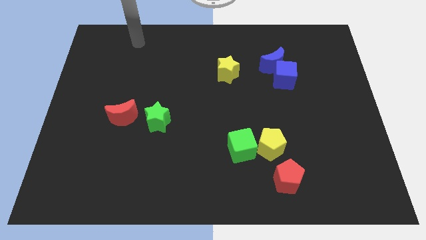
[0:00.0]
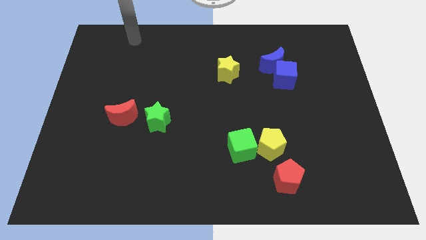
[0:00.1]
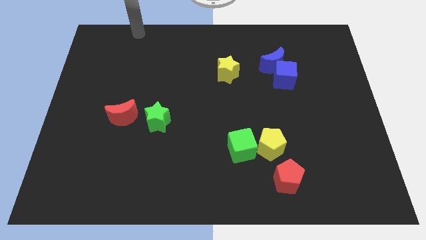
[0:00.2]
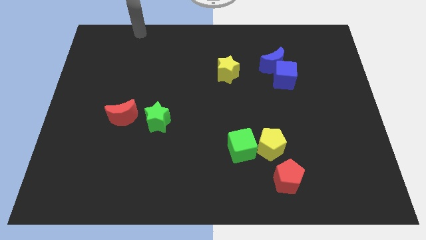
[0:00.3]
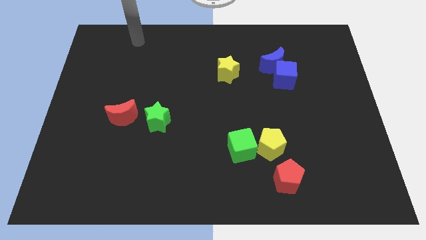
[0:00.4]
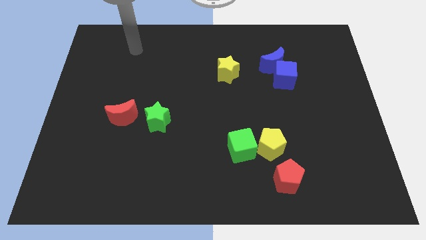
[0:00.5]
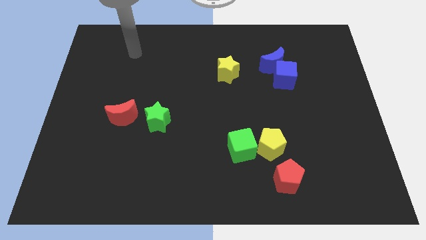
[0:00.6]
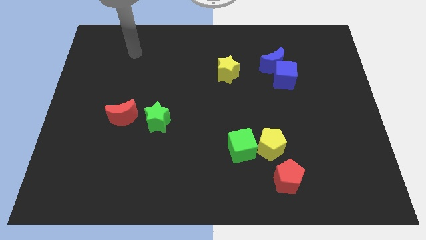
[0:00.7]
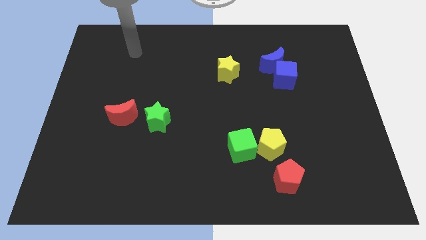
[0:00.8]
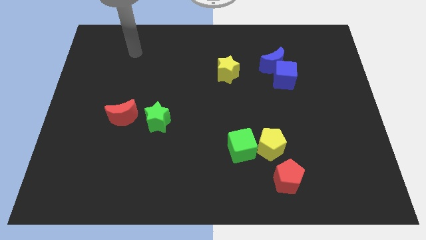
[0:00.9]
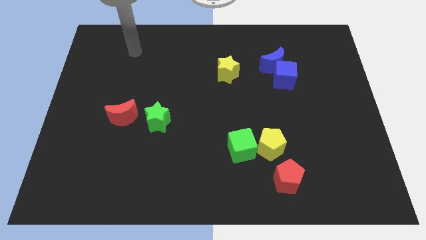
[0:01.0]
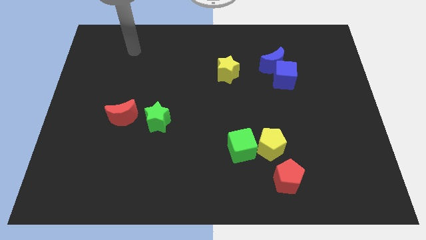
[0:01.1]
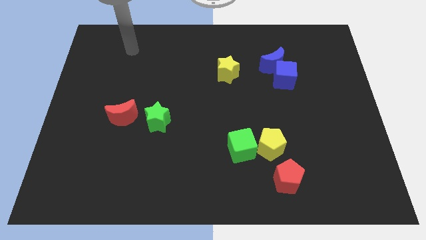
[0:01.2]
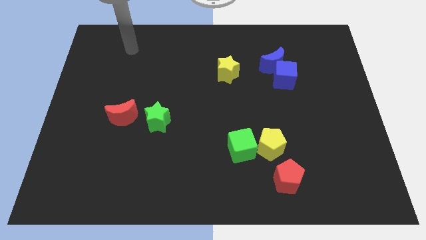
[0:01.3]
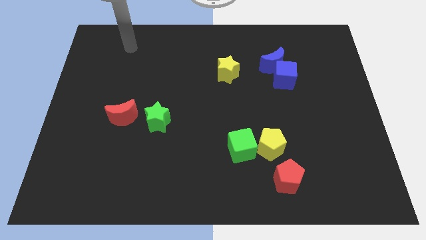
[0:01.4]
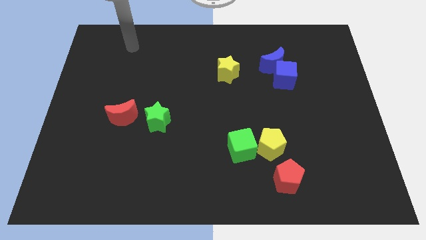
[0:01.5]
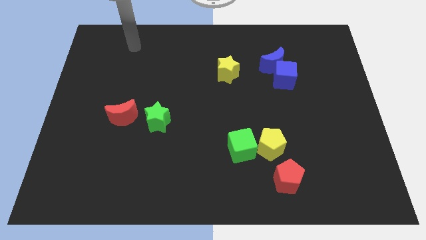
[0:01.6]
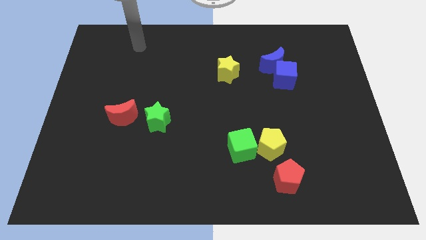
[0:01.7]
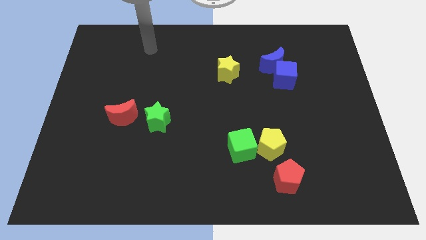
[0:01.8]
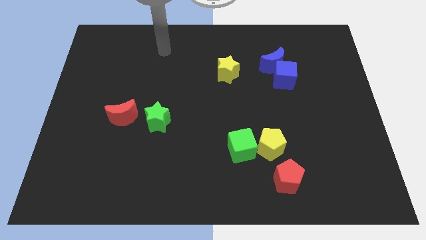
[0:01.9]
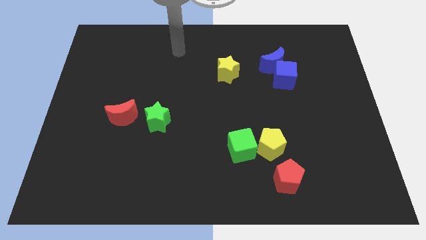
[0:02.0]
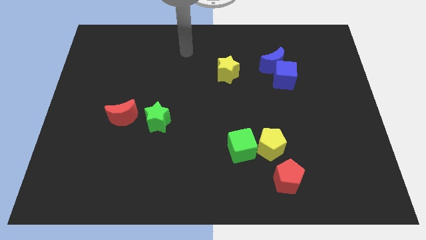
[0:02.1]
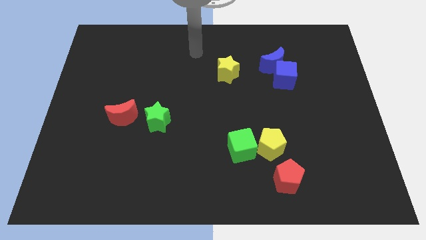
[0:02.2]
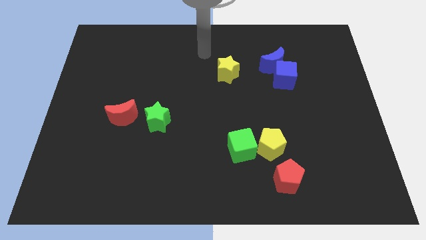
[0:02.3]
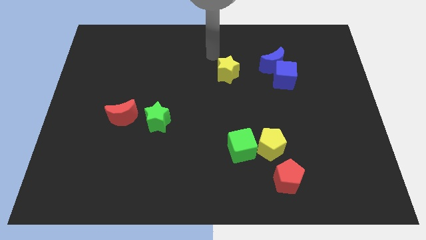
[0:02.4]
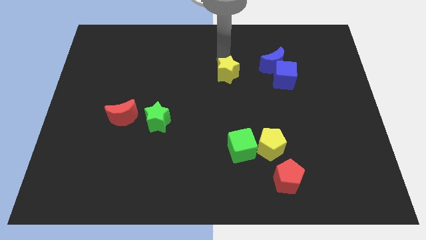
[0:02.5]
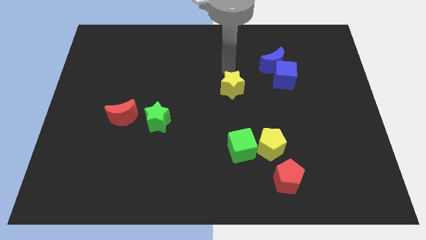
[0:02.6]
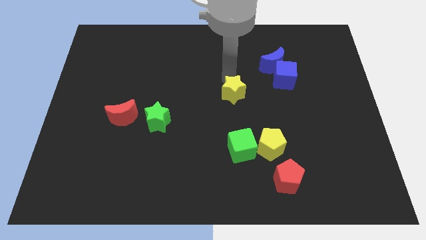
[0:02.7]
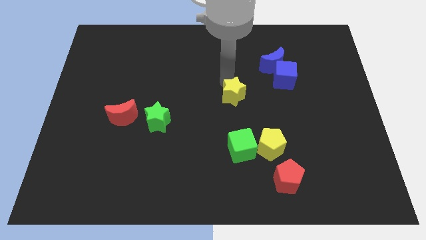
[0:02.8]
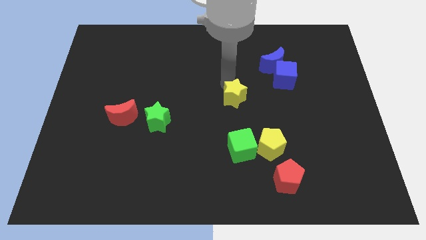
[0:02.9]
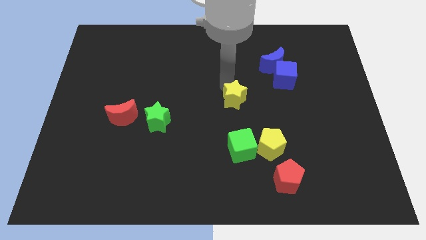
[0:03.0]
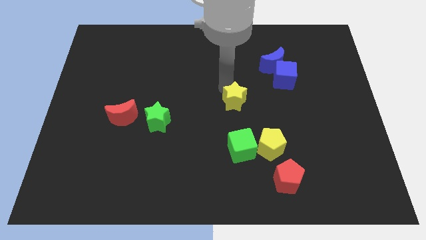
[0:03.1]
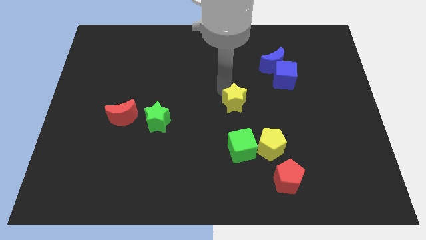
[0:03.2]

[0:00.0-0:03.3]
push the yellow star towards green cube

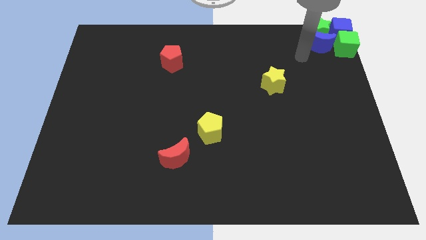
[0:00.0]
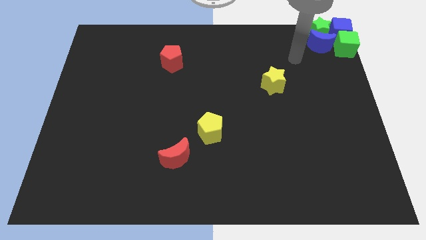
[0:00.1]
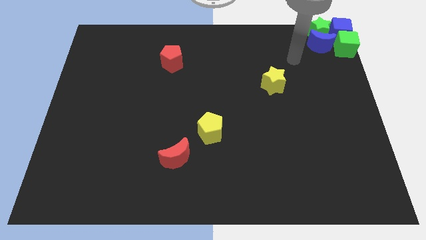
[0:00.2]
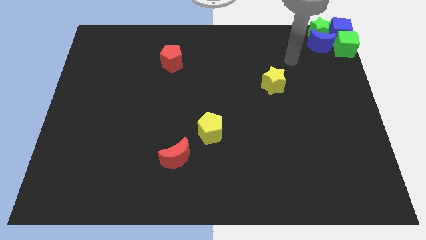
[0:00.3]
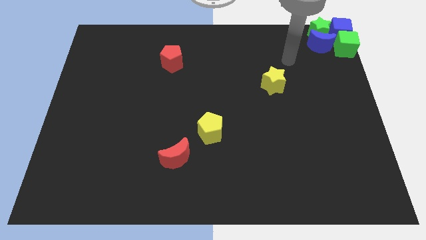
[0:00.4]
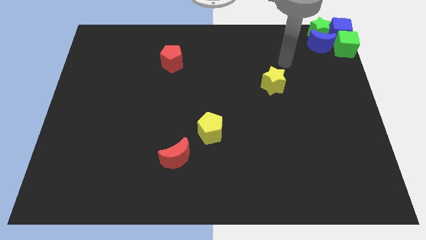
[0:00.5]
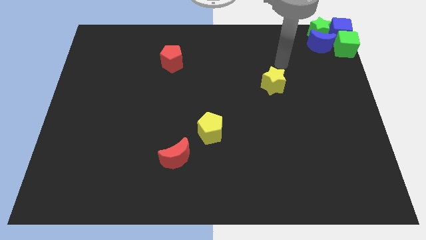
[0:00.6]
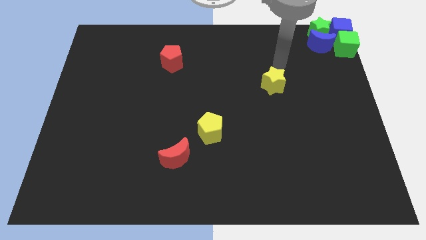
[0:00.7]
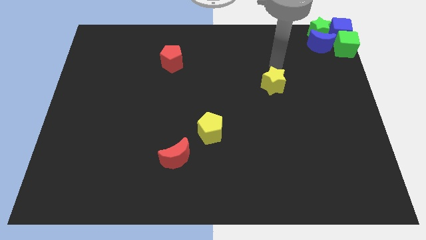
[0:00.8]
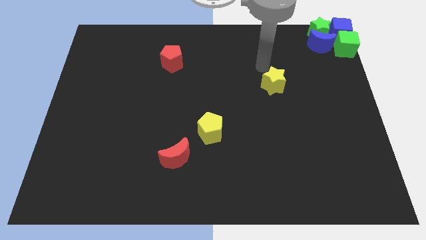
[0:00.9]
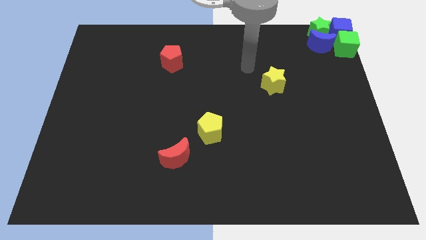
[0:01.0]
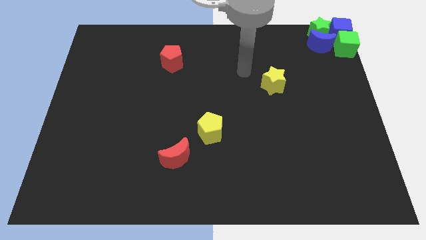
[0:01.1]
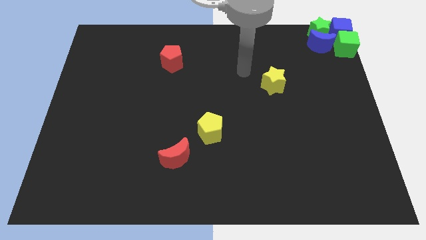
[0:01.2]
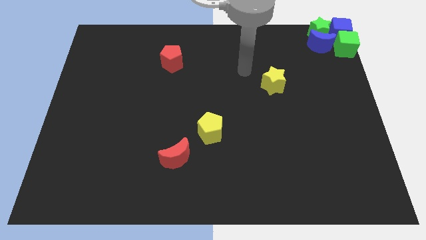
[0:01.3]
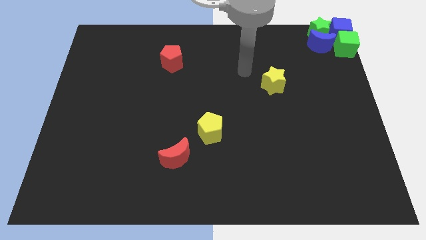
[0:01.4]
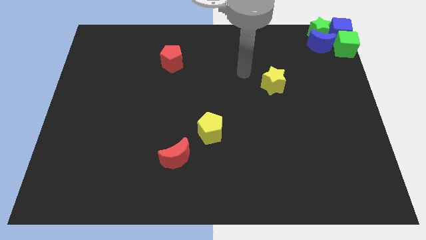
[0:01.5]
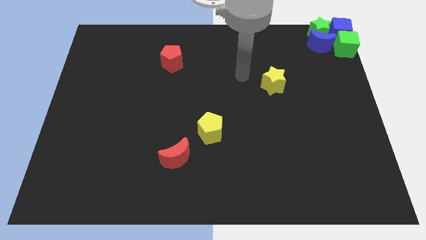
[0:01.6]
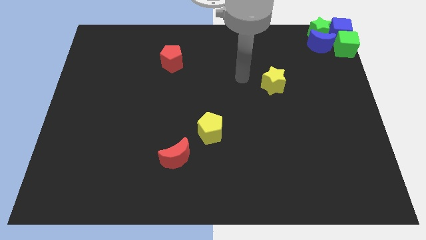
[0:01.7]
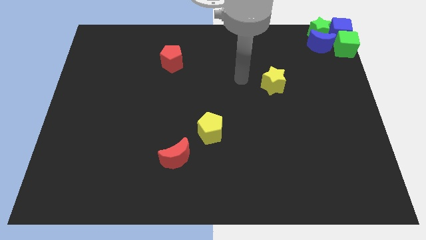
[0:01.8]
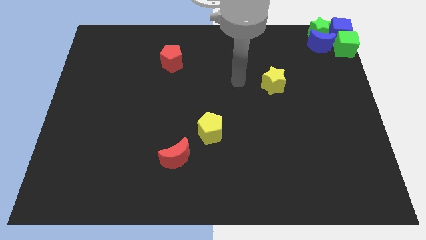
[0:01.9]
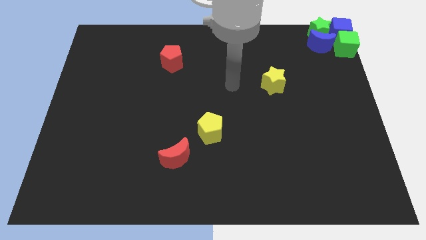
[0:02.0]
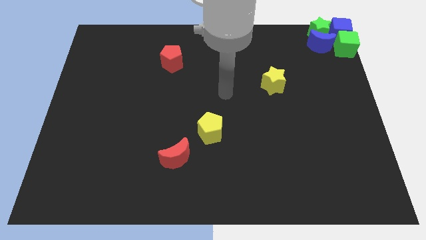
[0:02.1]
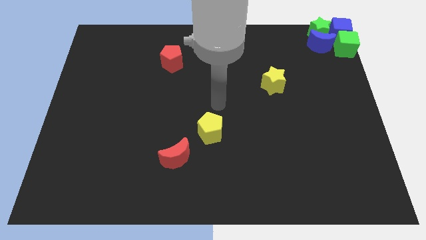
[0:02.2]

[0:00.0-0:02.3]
move your arm towards the yellow pentagon

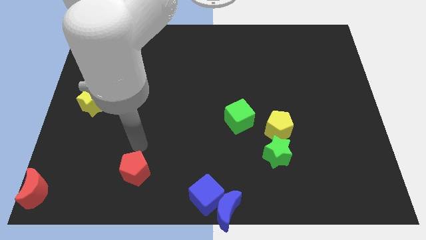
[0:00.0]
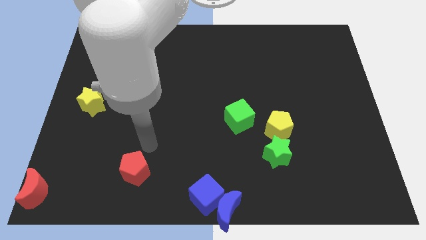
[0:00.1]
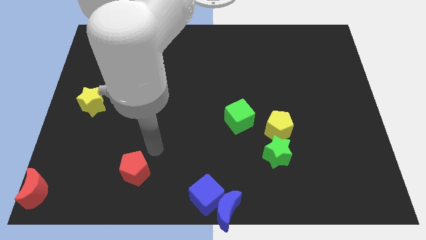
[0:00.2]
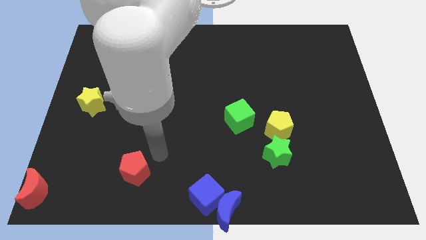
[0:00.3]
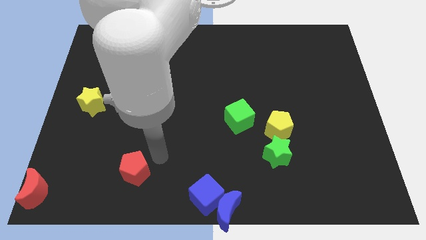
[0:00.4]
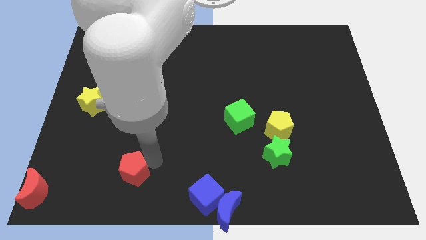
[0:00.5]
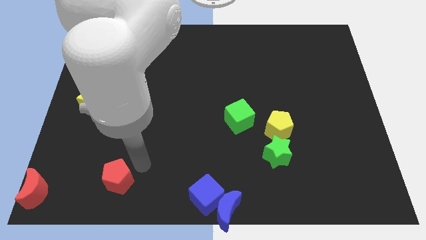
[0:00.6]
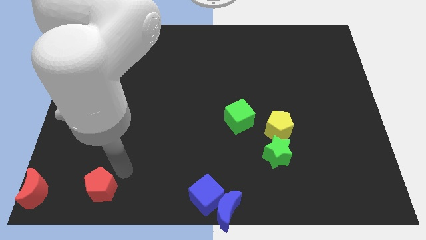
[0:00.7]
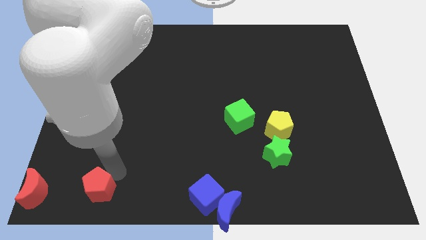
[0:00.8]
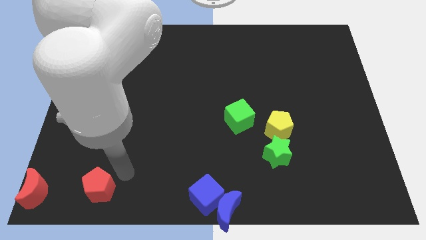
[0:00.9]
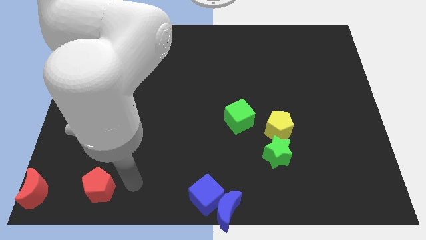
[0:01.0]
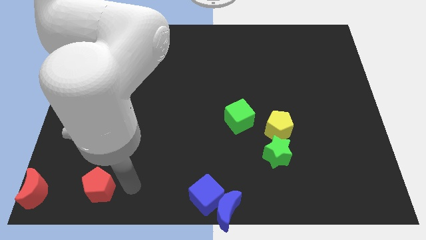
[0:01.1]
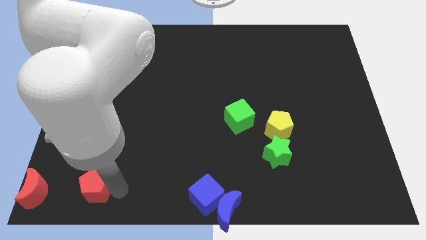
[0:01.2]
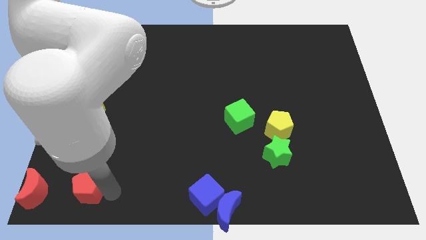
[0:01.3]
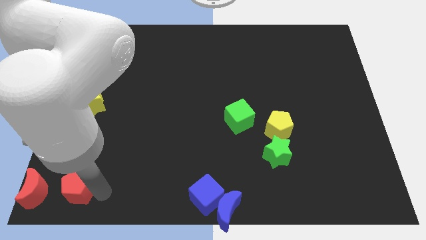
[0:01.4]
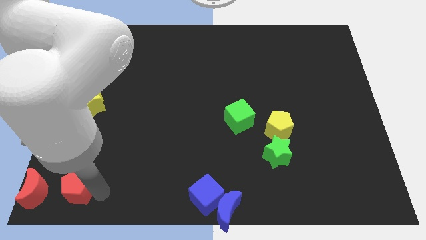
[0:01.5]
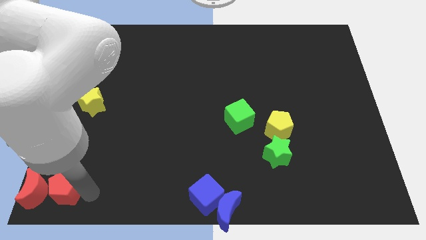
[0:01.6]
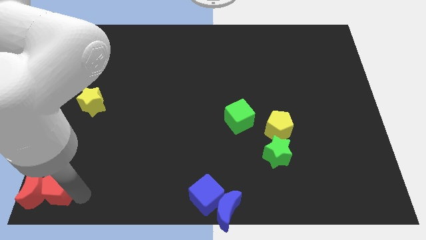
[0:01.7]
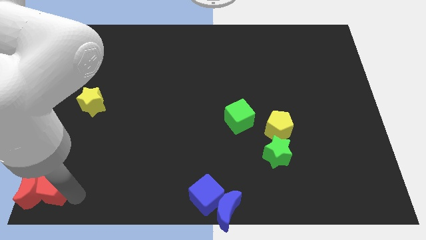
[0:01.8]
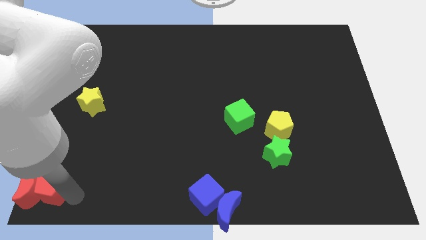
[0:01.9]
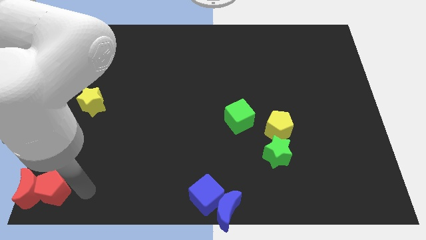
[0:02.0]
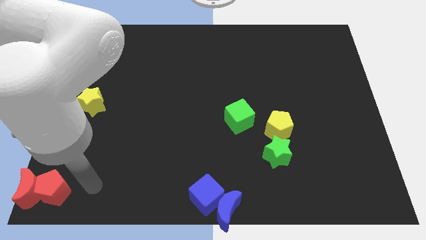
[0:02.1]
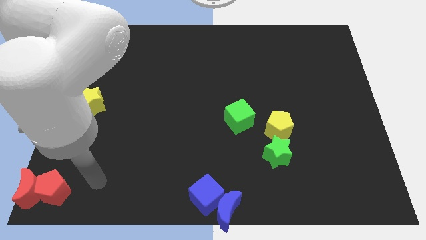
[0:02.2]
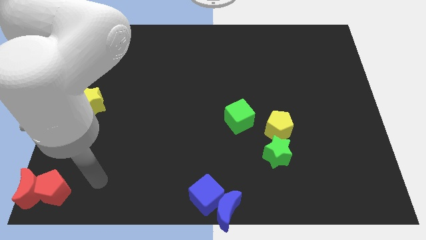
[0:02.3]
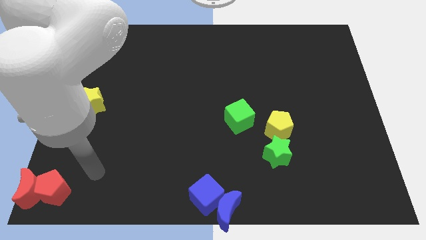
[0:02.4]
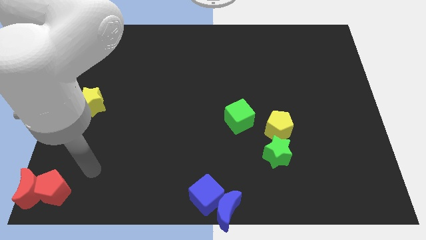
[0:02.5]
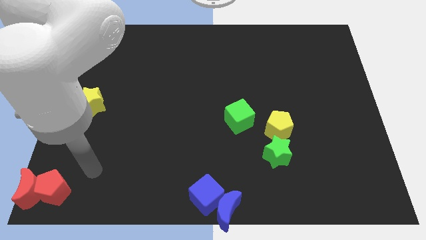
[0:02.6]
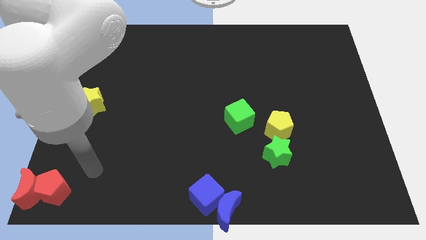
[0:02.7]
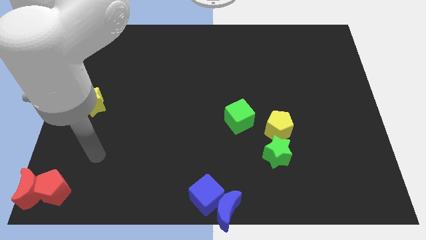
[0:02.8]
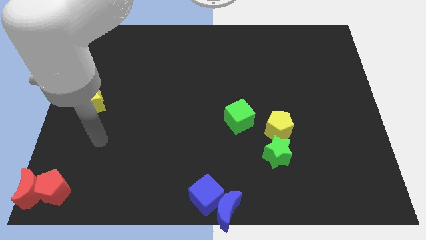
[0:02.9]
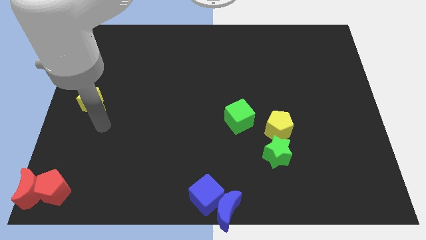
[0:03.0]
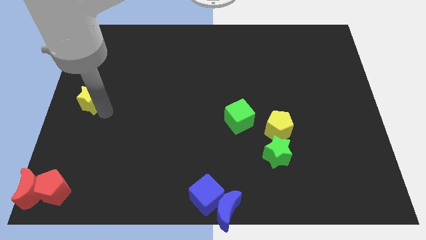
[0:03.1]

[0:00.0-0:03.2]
push the red pentagon into the red moon
